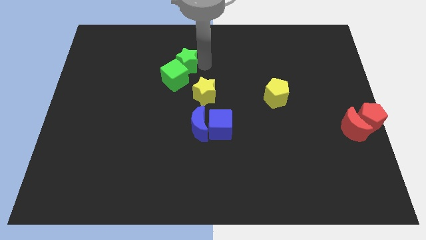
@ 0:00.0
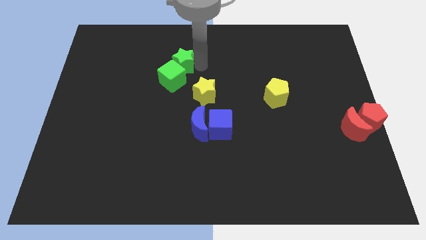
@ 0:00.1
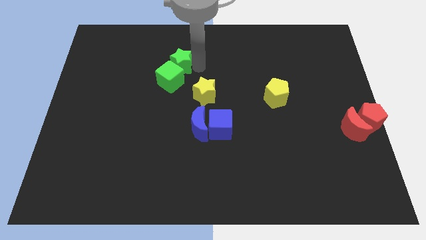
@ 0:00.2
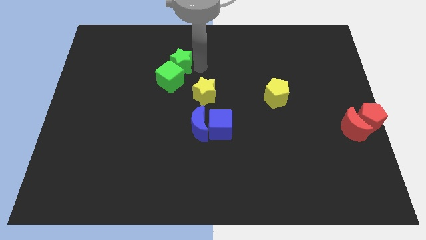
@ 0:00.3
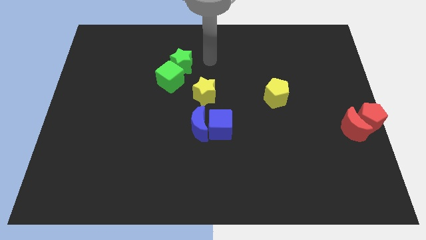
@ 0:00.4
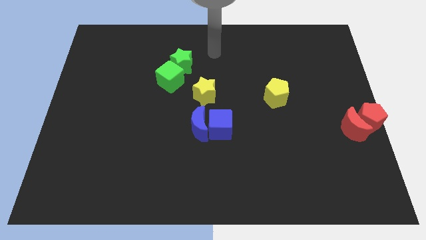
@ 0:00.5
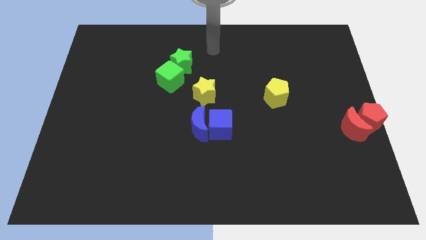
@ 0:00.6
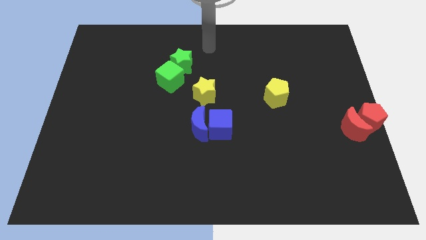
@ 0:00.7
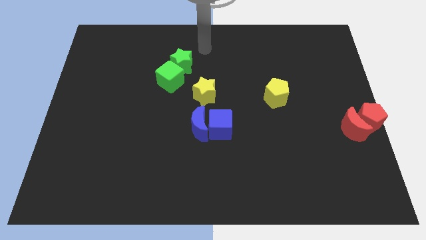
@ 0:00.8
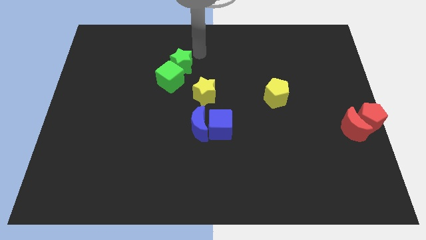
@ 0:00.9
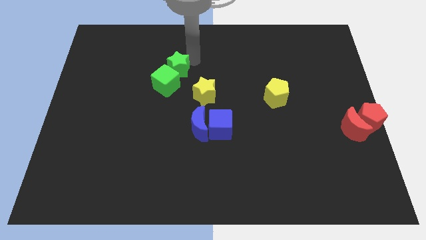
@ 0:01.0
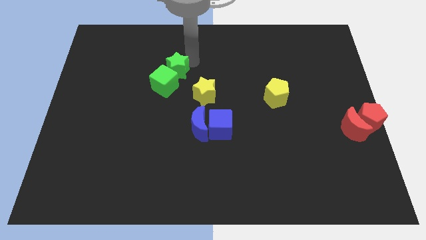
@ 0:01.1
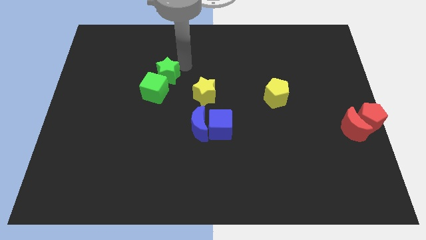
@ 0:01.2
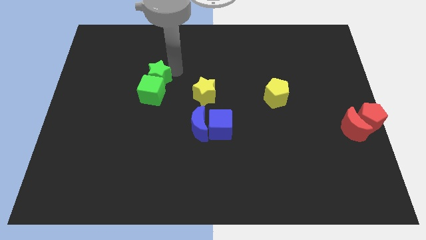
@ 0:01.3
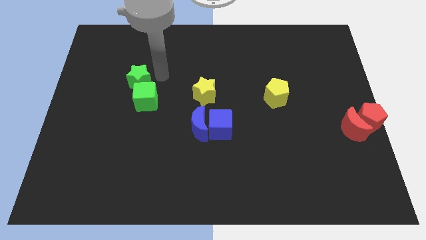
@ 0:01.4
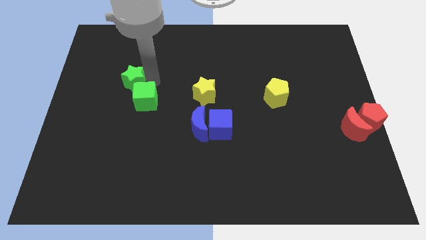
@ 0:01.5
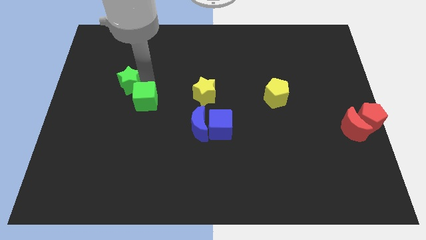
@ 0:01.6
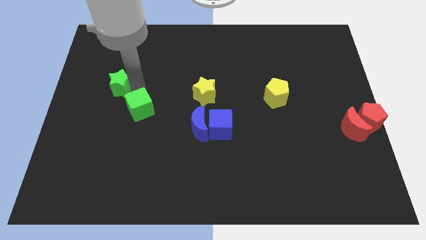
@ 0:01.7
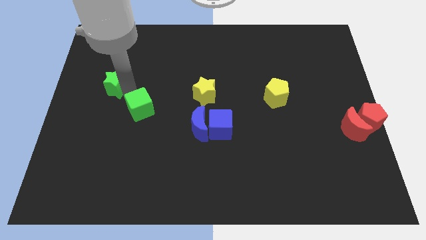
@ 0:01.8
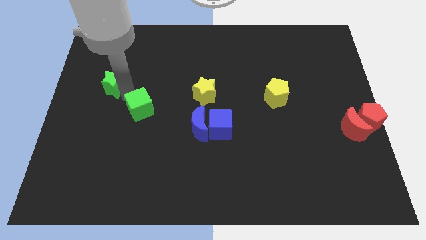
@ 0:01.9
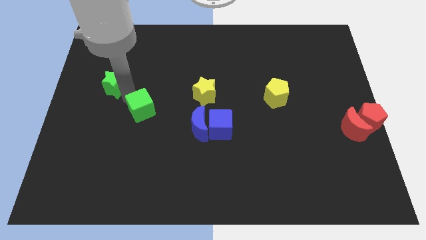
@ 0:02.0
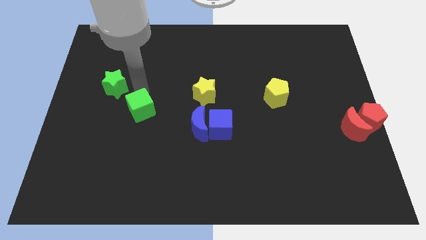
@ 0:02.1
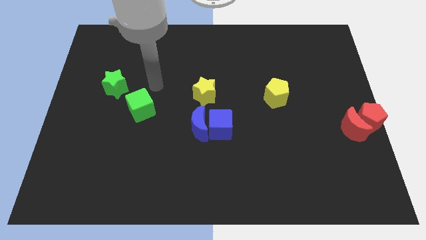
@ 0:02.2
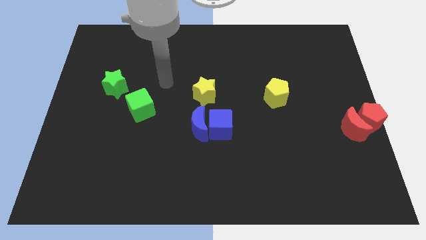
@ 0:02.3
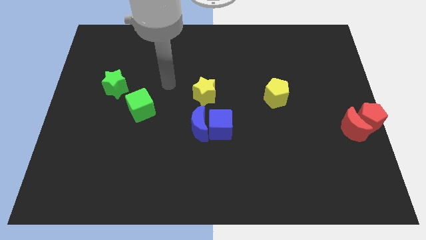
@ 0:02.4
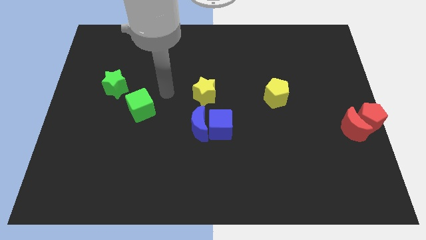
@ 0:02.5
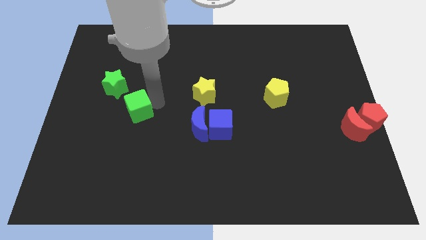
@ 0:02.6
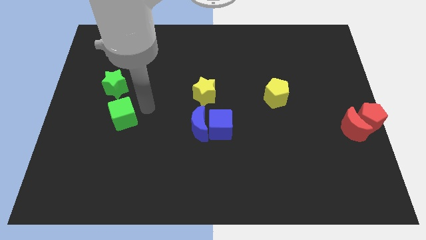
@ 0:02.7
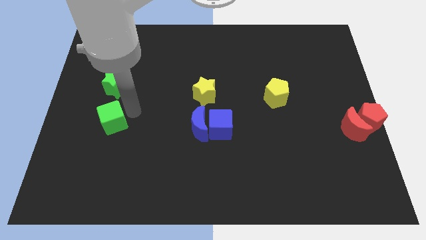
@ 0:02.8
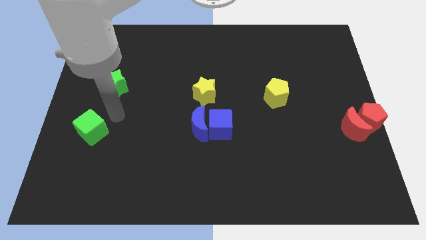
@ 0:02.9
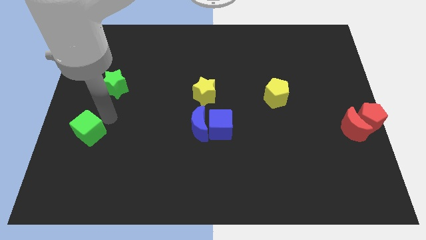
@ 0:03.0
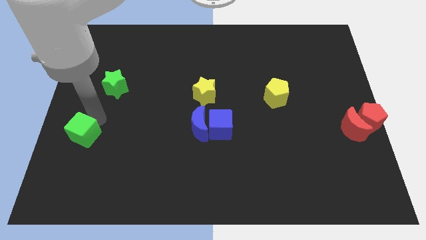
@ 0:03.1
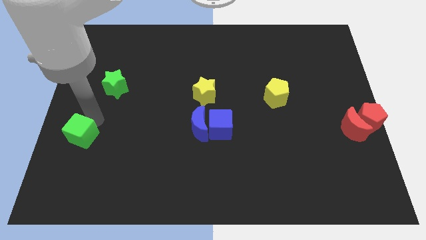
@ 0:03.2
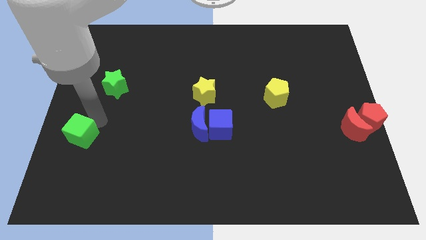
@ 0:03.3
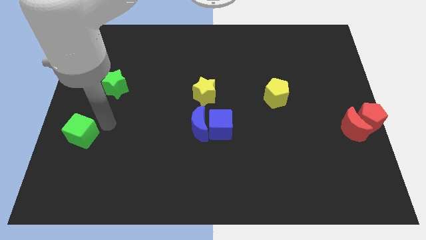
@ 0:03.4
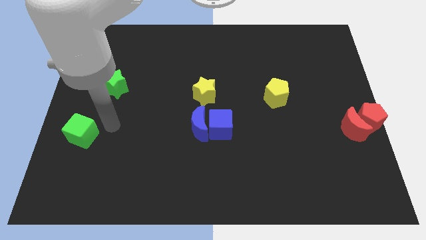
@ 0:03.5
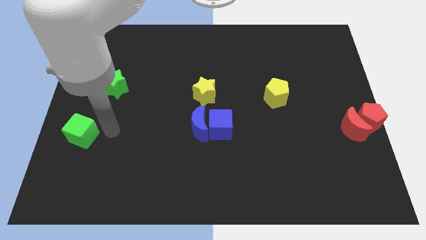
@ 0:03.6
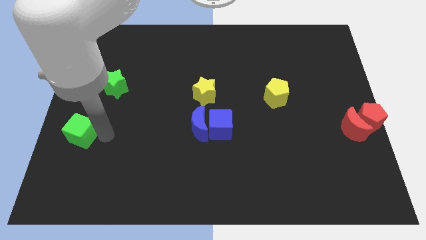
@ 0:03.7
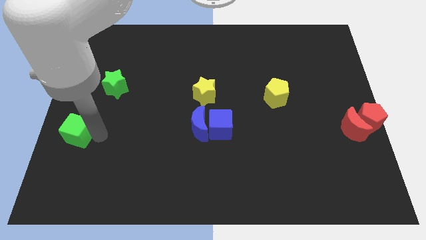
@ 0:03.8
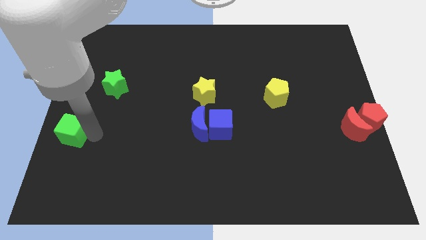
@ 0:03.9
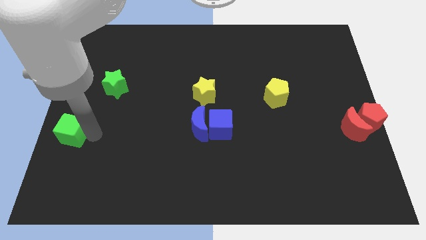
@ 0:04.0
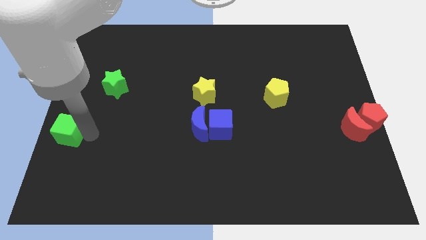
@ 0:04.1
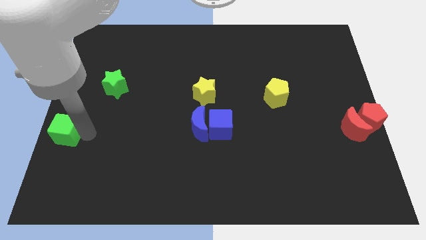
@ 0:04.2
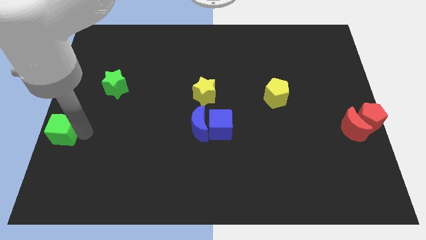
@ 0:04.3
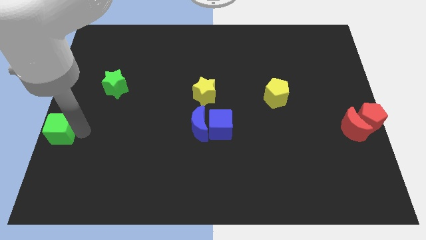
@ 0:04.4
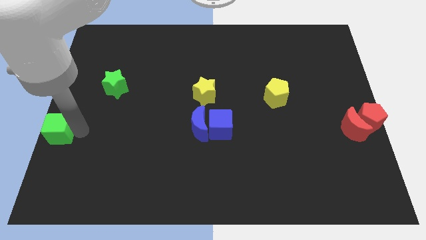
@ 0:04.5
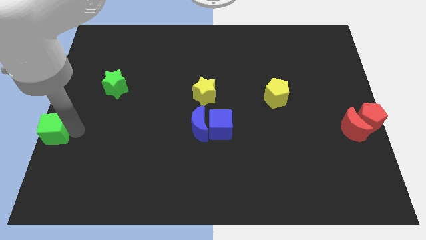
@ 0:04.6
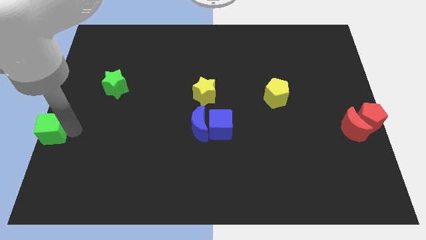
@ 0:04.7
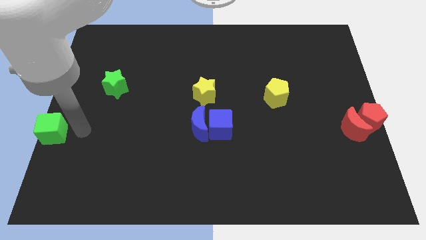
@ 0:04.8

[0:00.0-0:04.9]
push the green cube to the left center of the board

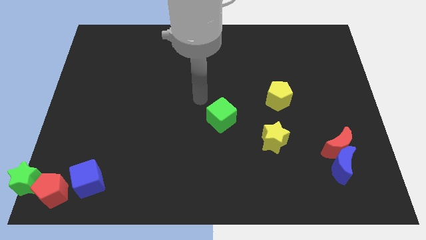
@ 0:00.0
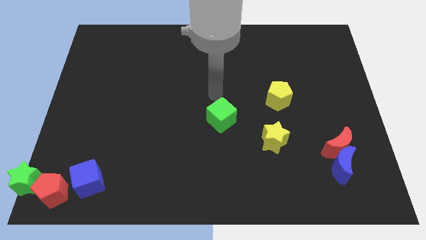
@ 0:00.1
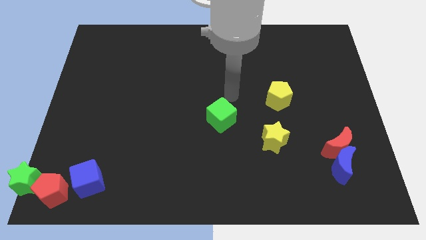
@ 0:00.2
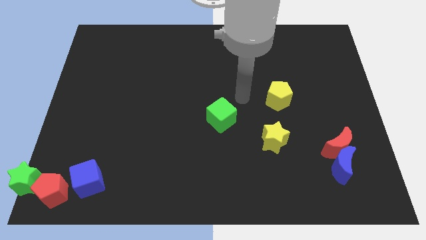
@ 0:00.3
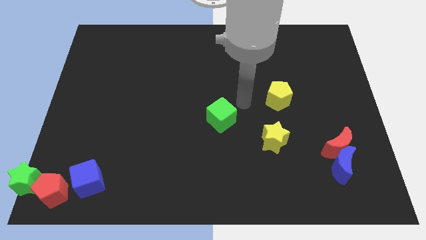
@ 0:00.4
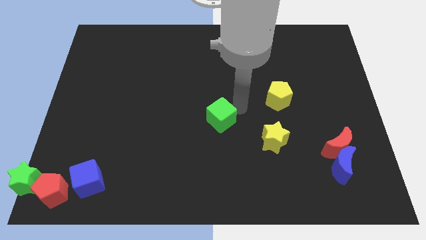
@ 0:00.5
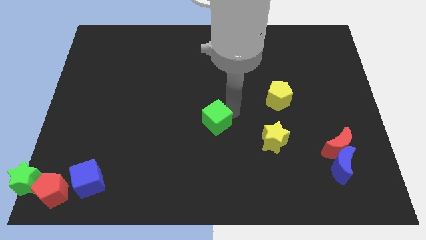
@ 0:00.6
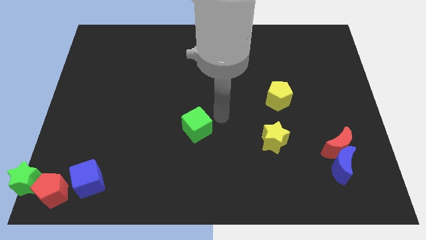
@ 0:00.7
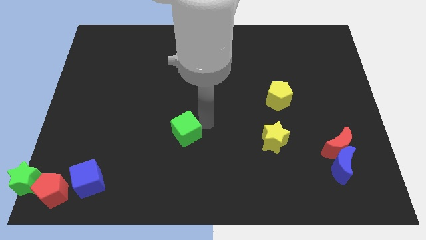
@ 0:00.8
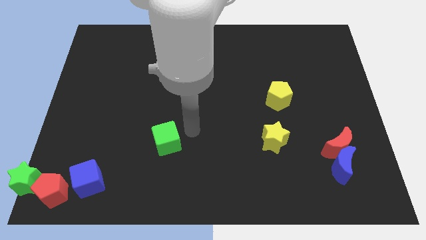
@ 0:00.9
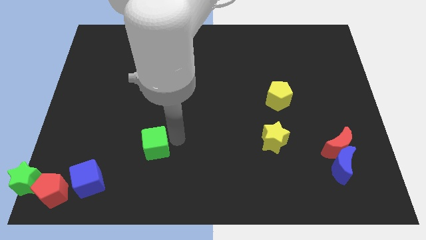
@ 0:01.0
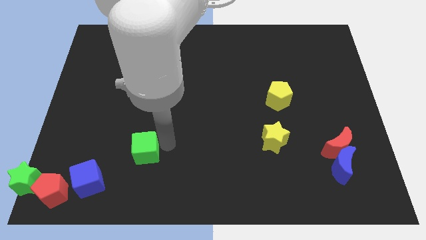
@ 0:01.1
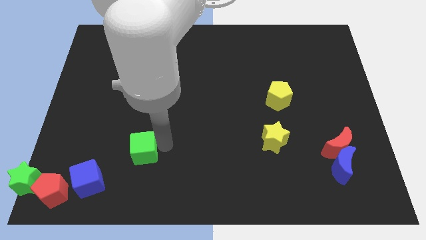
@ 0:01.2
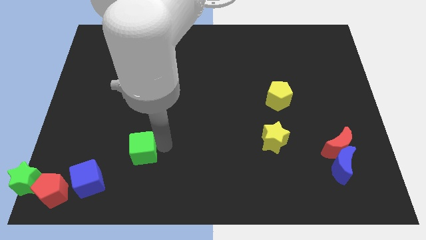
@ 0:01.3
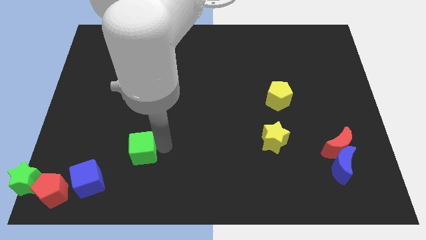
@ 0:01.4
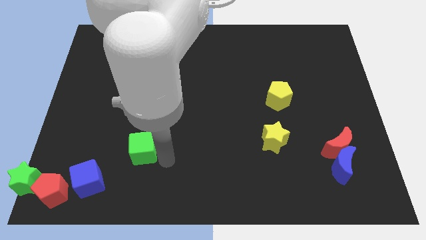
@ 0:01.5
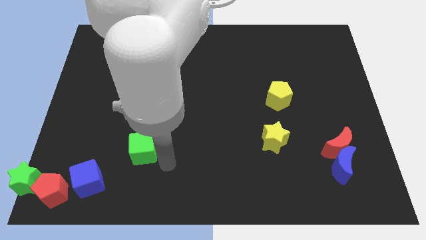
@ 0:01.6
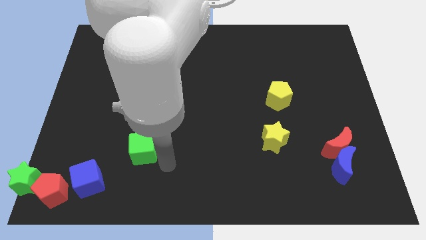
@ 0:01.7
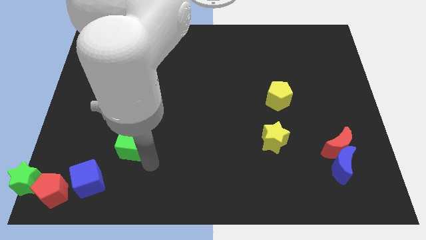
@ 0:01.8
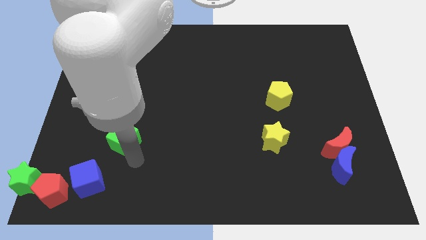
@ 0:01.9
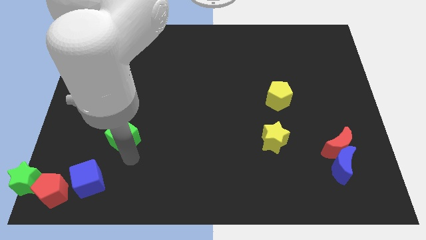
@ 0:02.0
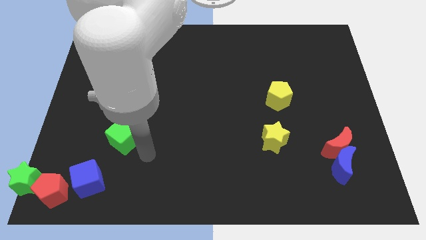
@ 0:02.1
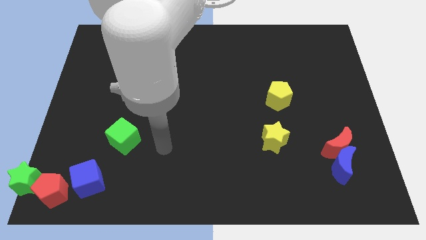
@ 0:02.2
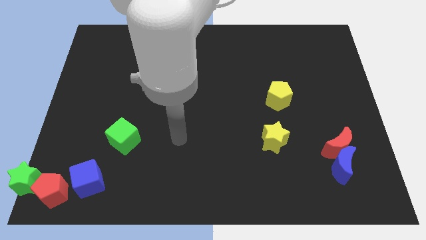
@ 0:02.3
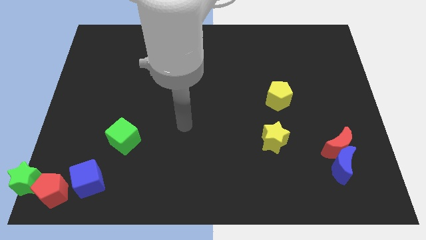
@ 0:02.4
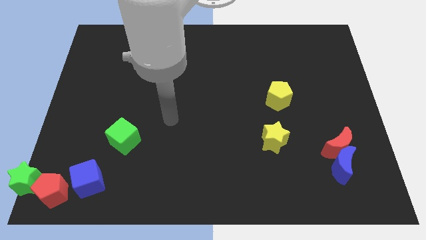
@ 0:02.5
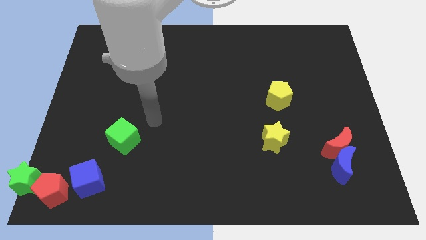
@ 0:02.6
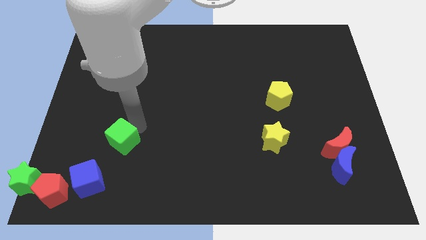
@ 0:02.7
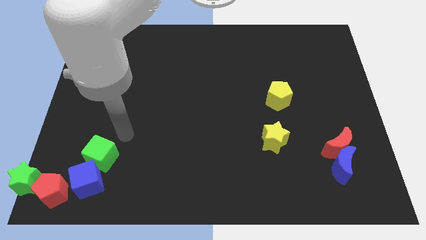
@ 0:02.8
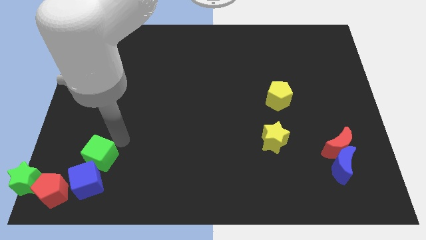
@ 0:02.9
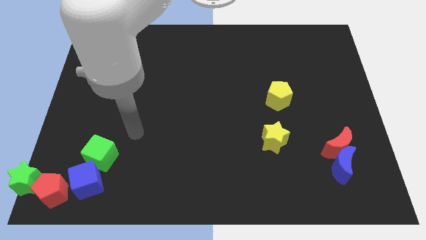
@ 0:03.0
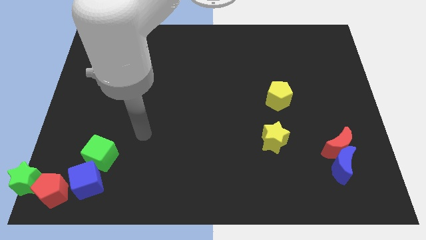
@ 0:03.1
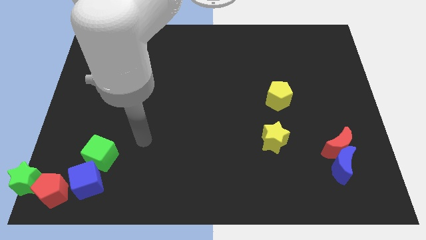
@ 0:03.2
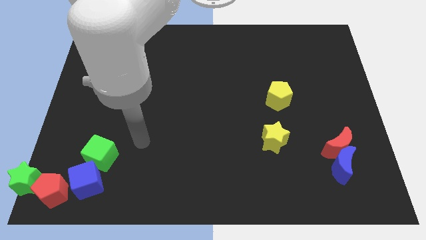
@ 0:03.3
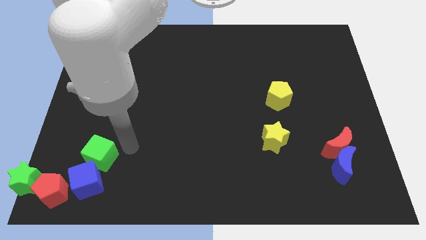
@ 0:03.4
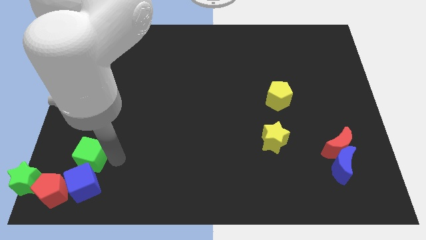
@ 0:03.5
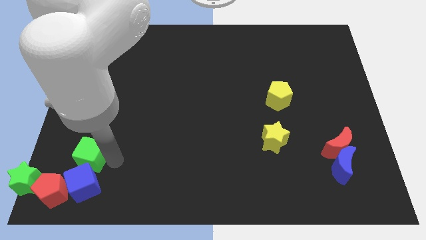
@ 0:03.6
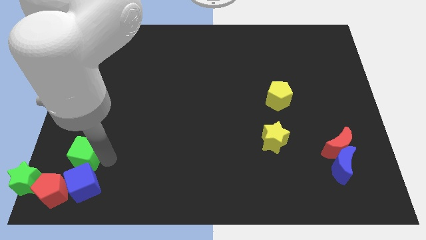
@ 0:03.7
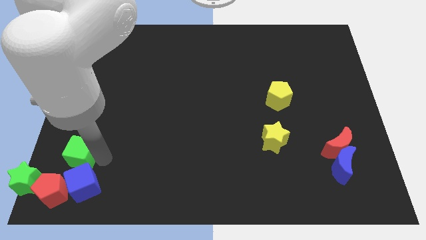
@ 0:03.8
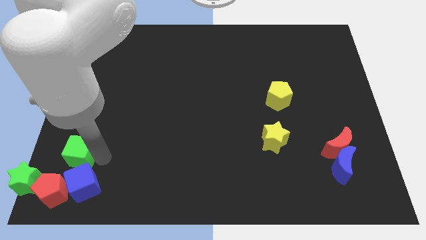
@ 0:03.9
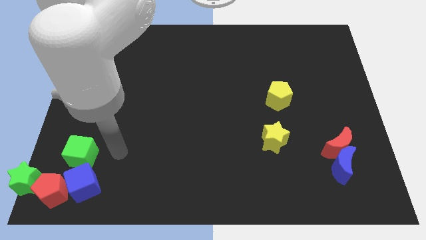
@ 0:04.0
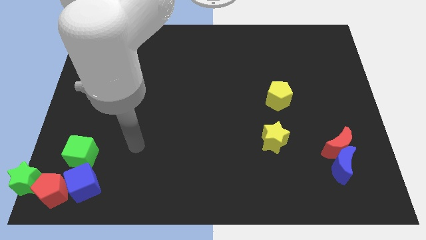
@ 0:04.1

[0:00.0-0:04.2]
place the green cube above the blue cube
